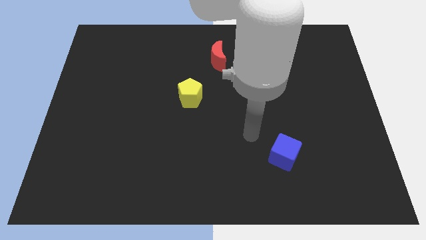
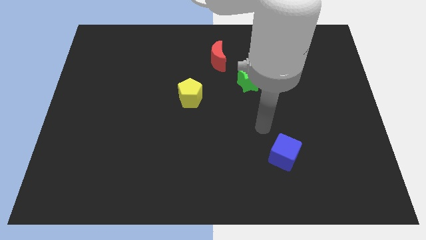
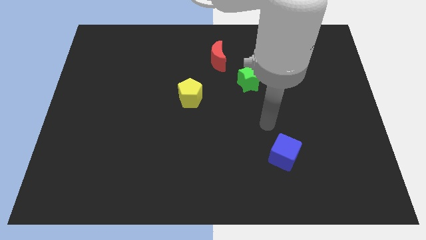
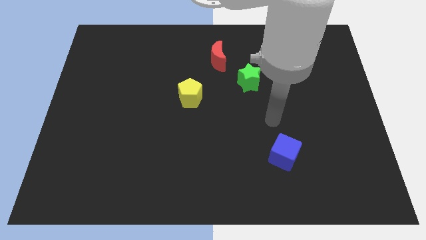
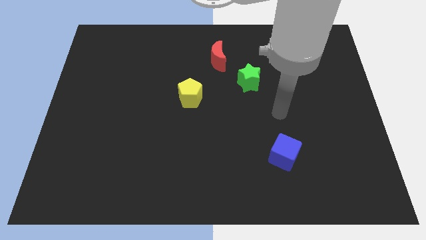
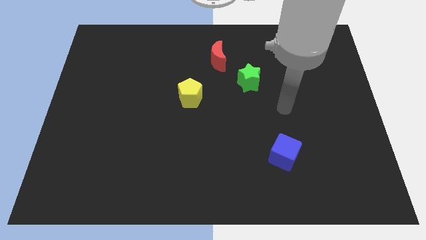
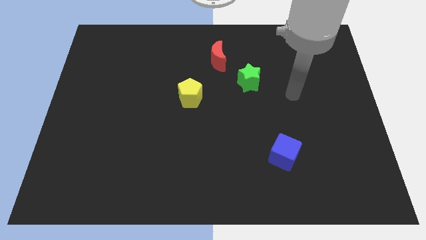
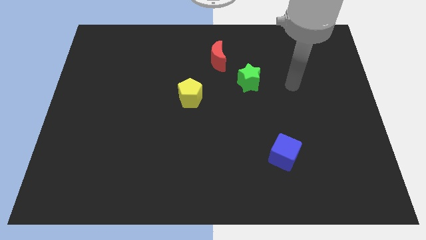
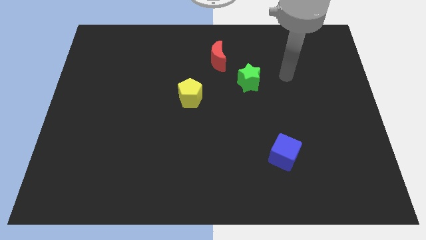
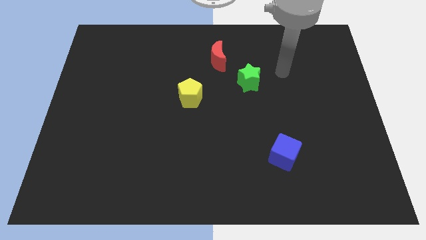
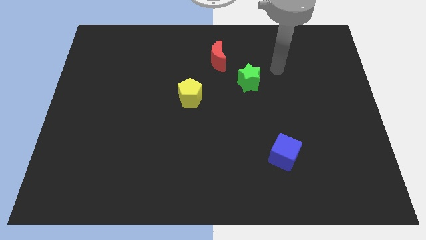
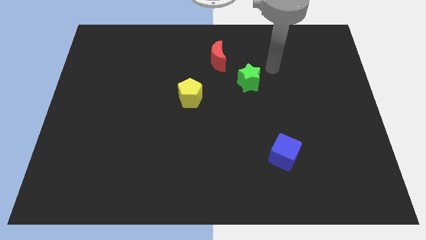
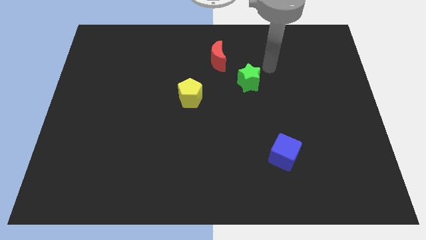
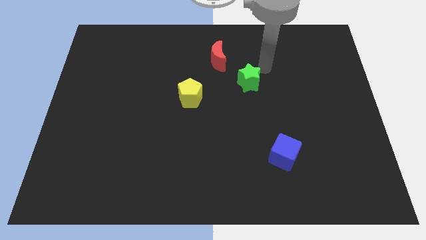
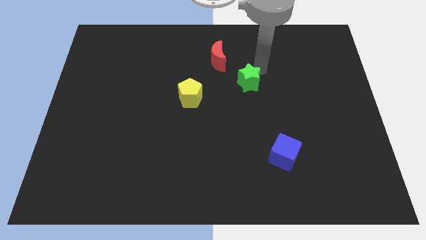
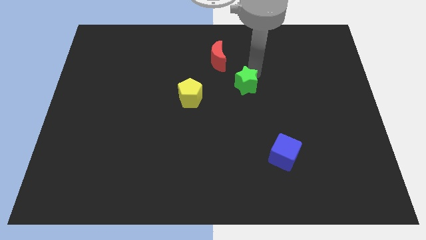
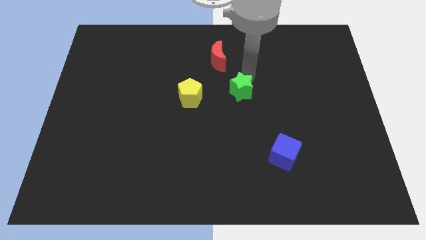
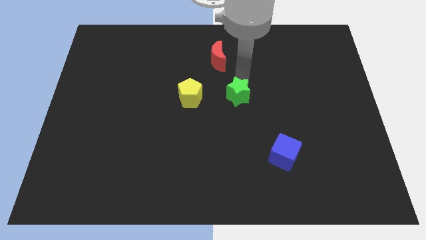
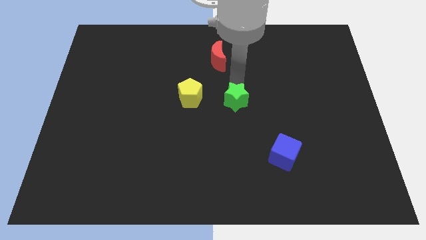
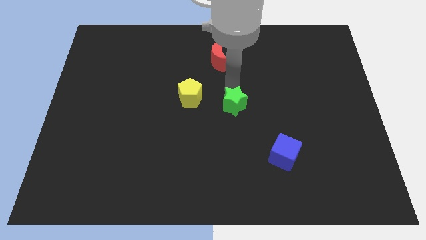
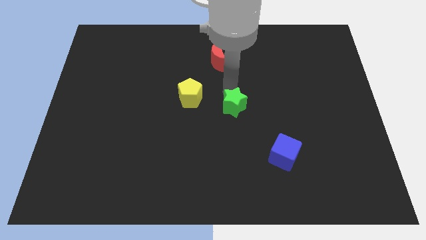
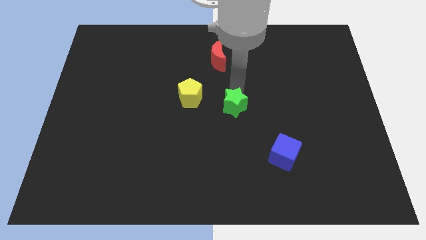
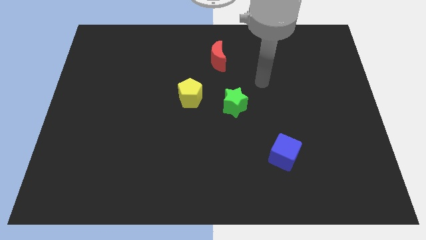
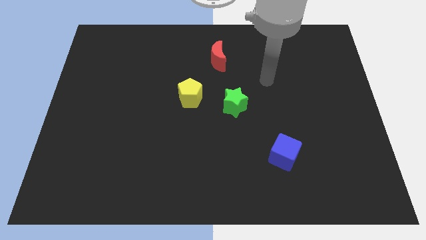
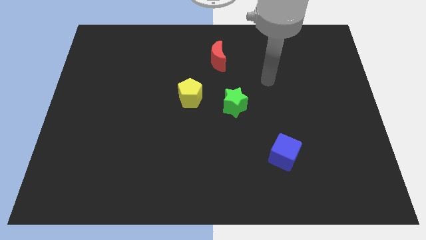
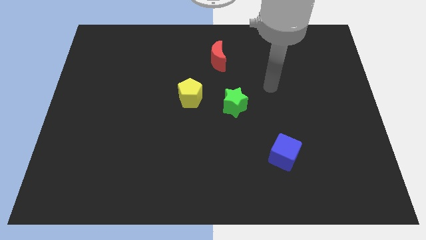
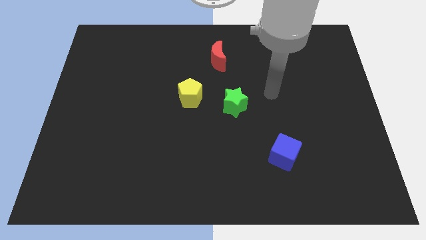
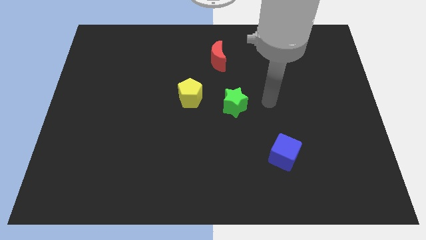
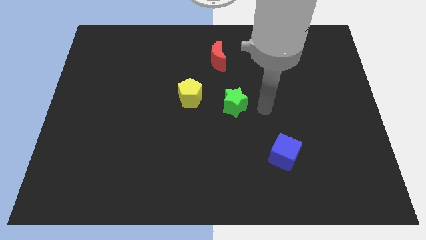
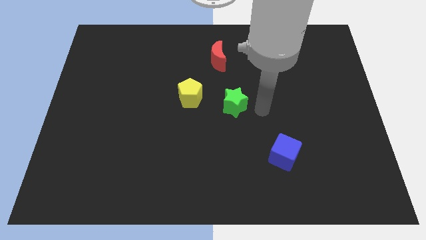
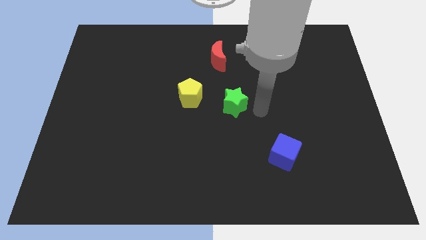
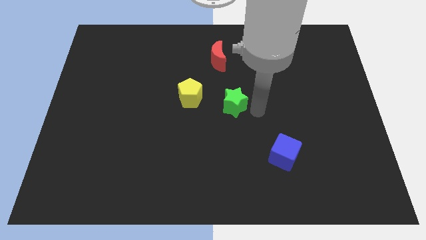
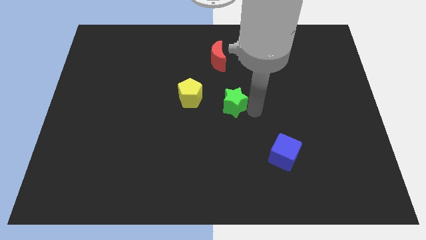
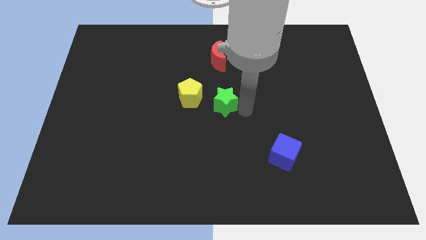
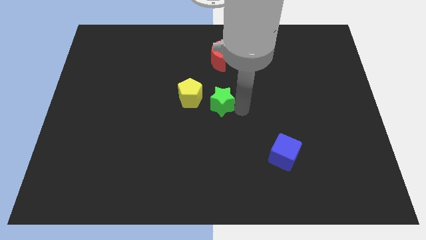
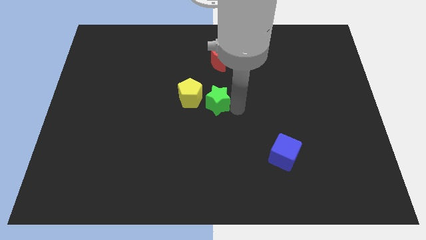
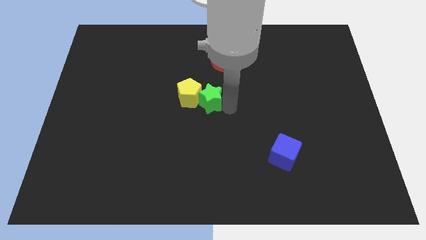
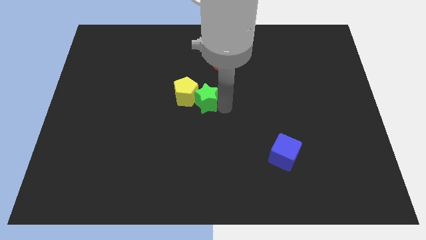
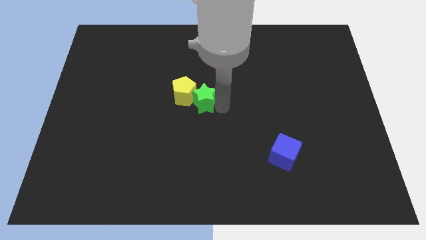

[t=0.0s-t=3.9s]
move the green block to the pentagon

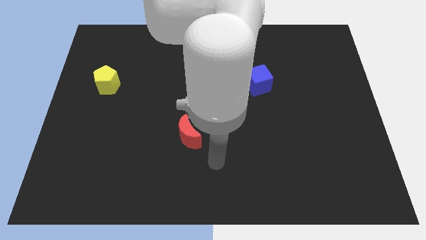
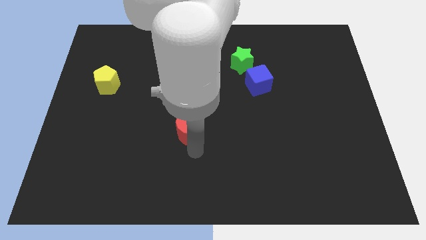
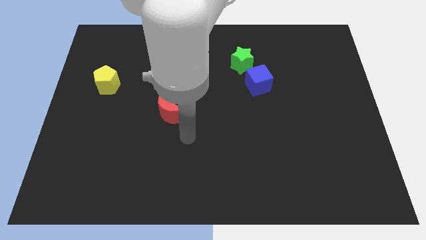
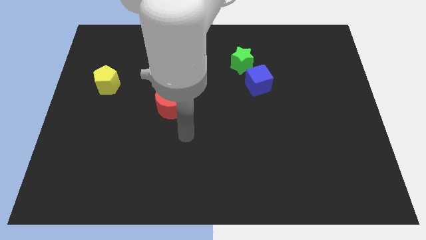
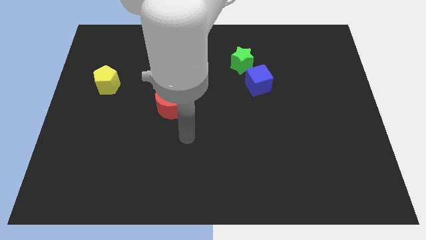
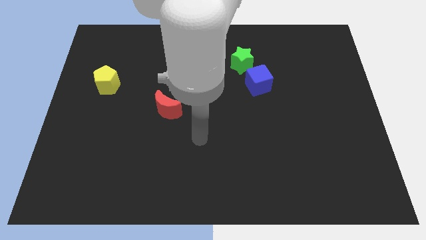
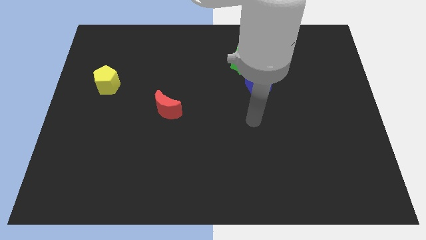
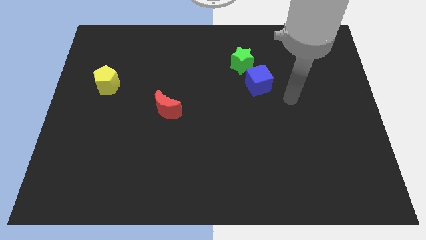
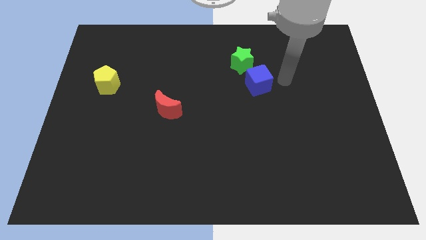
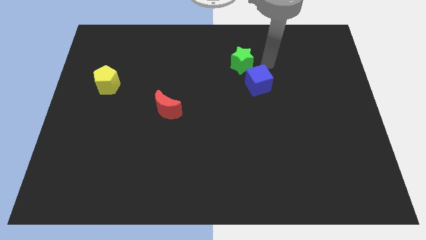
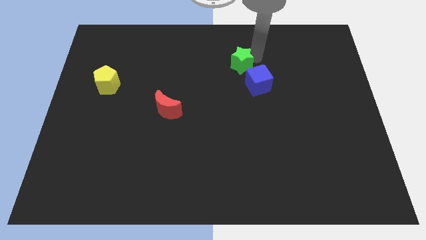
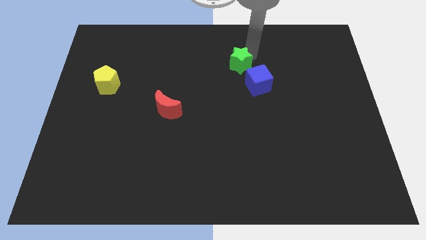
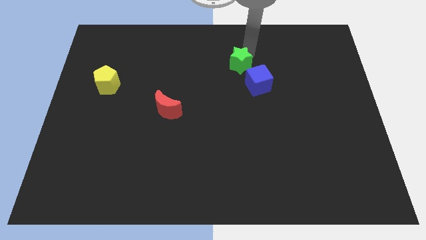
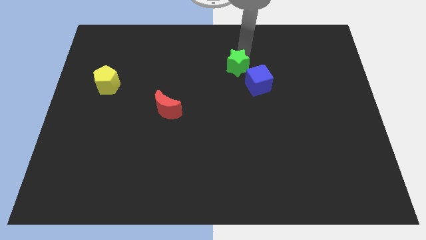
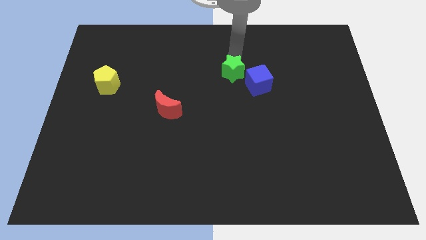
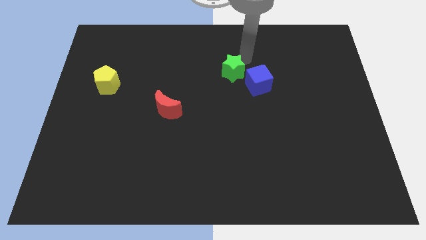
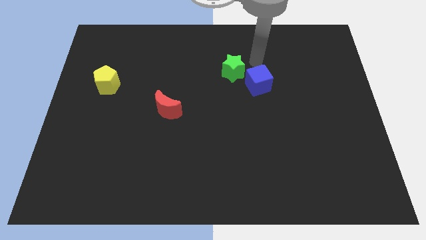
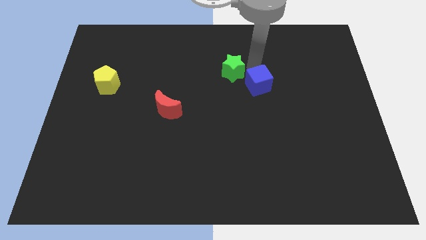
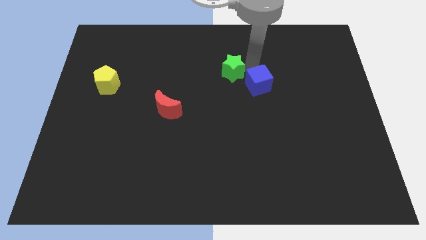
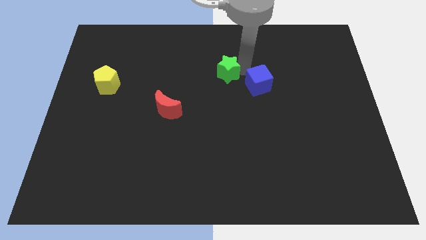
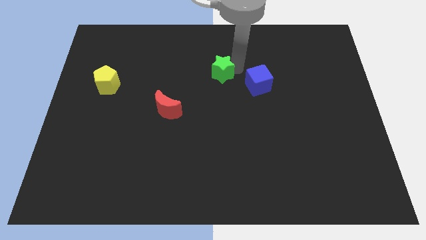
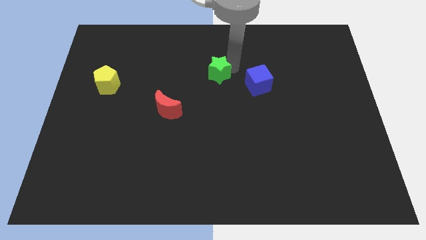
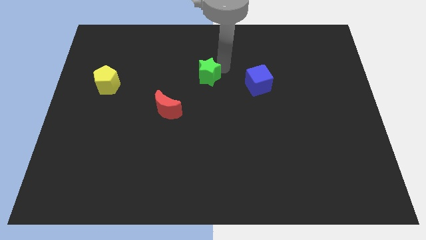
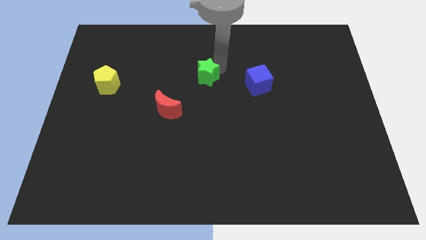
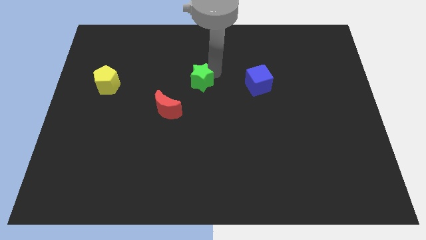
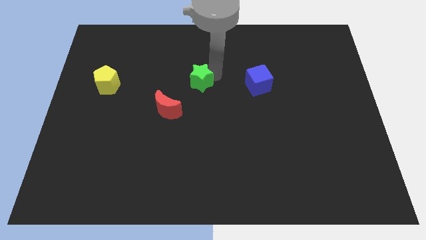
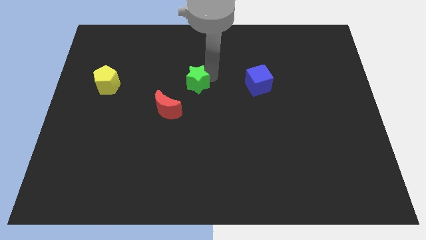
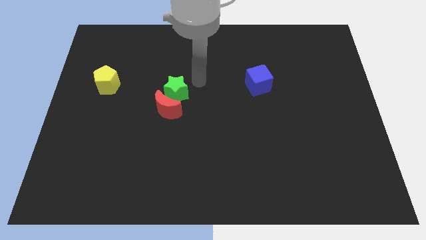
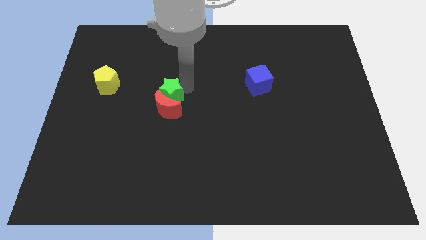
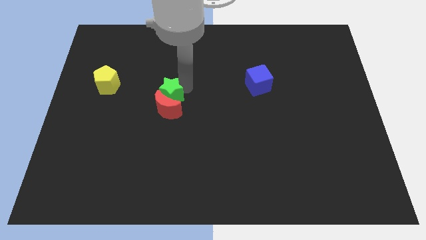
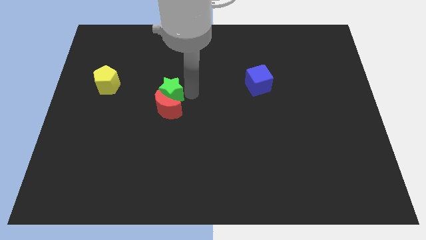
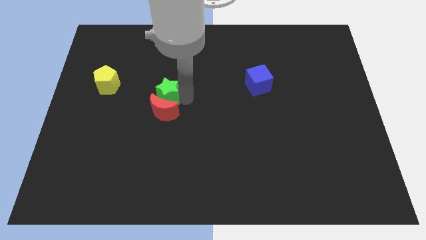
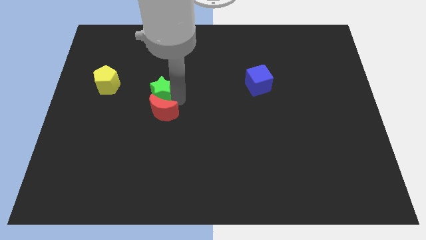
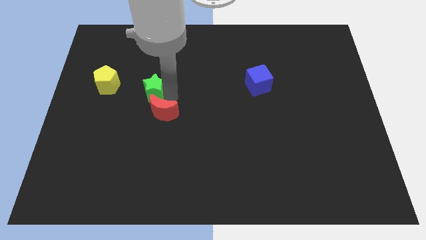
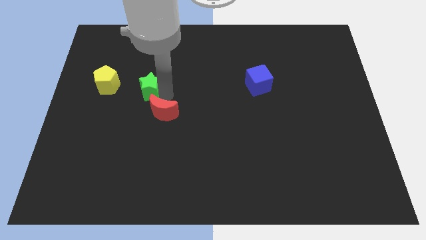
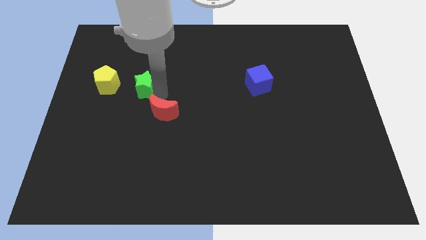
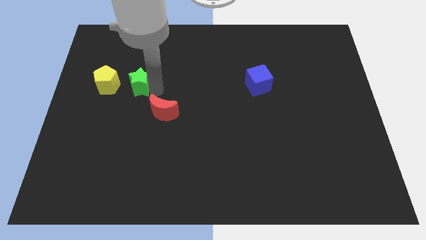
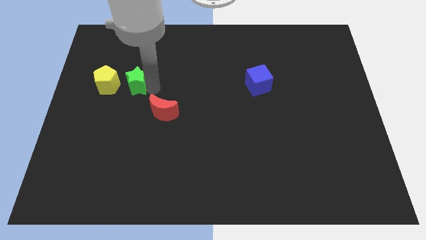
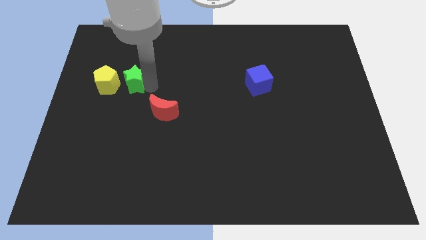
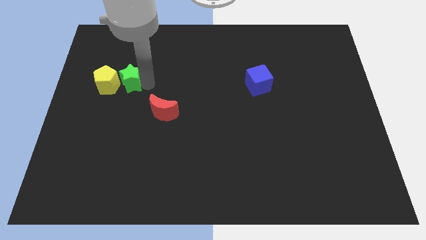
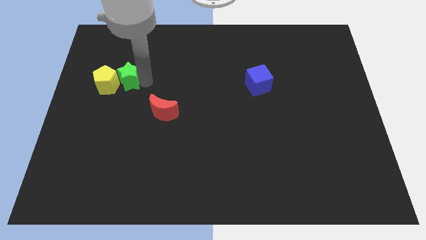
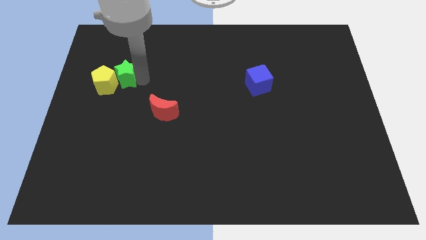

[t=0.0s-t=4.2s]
move the star close to the yellow pentagon

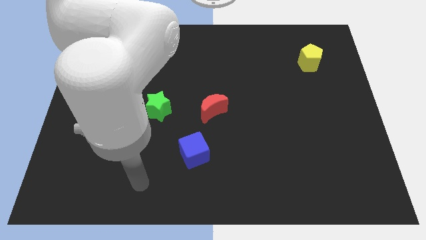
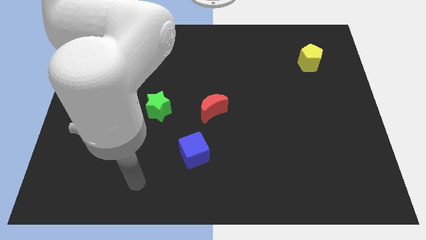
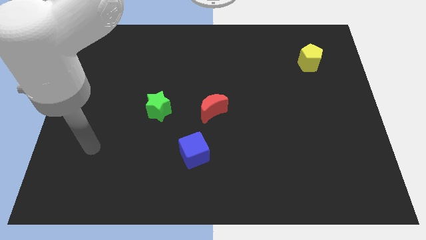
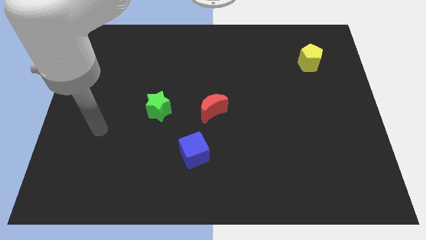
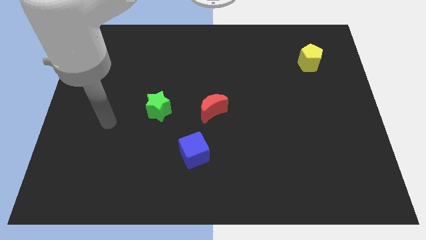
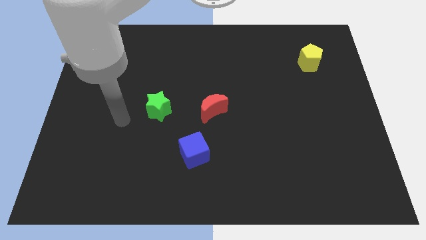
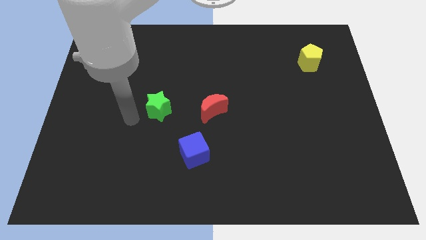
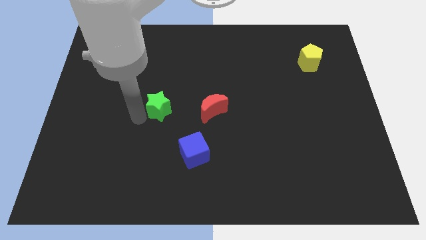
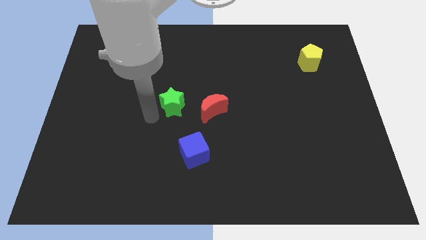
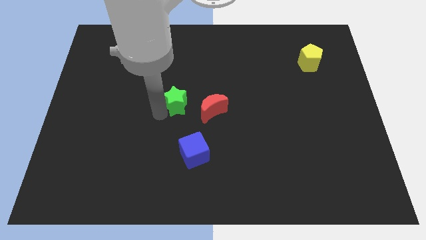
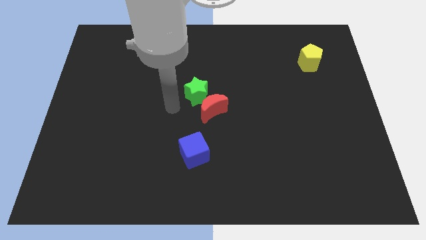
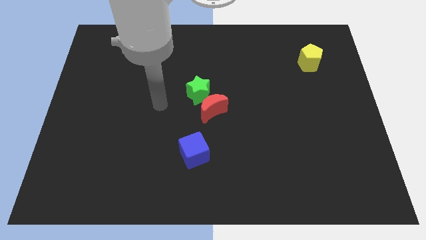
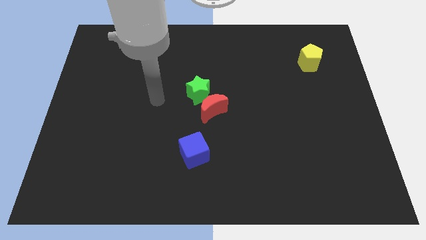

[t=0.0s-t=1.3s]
push the green block close to the red moon
